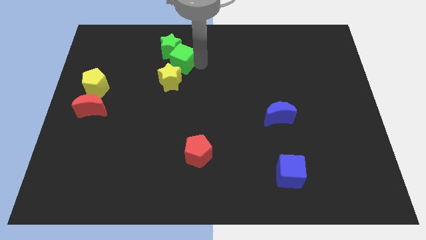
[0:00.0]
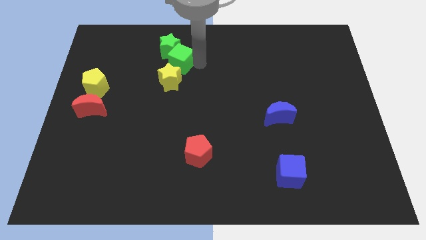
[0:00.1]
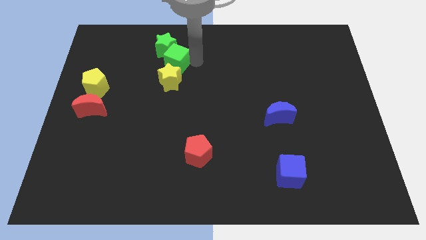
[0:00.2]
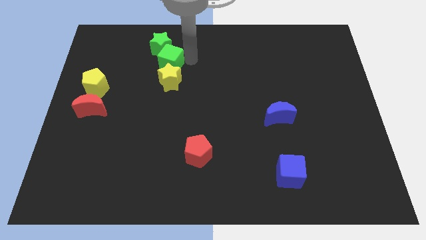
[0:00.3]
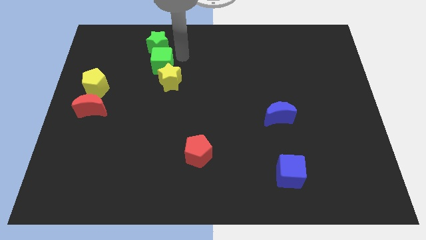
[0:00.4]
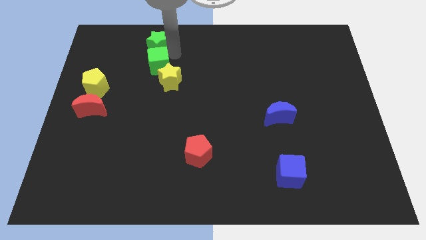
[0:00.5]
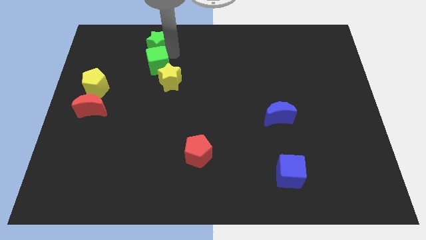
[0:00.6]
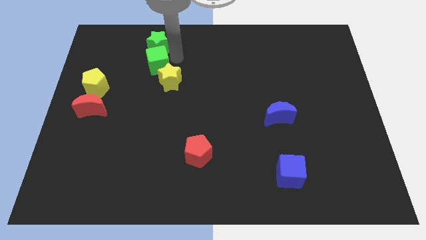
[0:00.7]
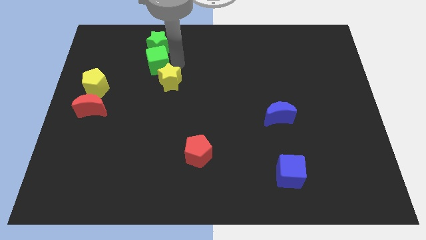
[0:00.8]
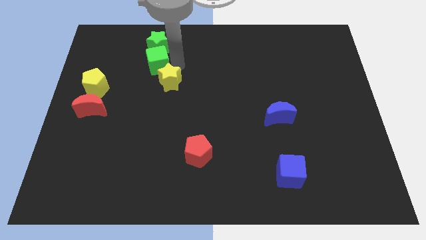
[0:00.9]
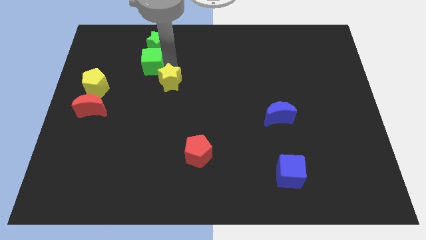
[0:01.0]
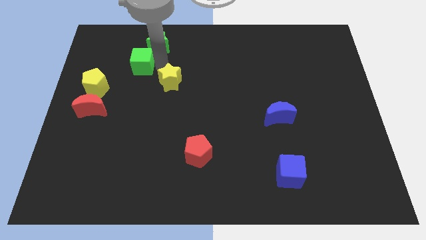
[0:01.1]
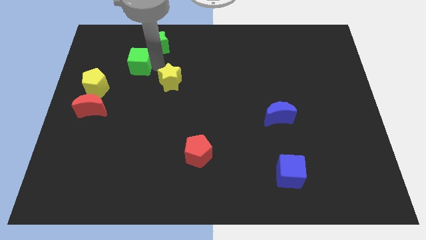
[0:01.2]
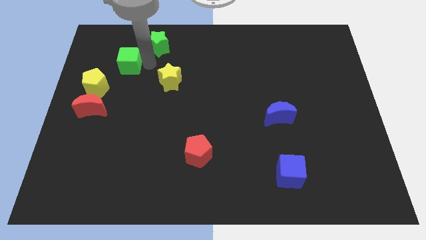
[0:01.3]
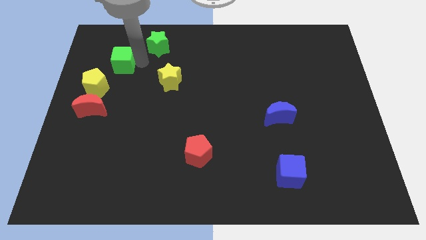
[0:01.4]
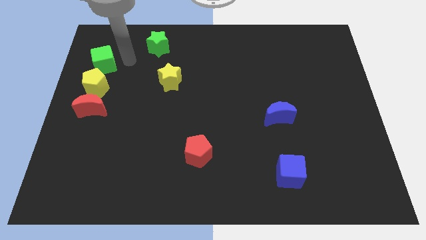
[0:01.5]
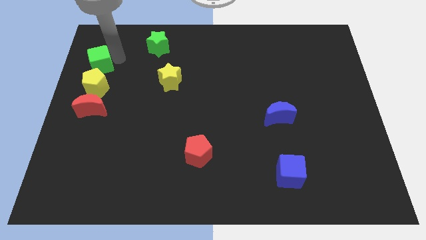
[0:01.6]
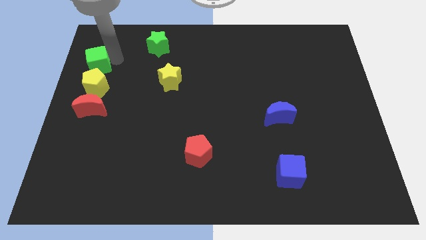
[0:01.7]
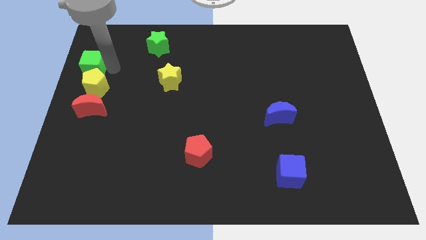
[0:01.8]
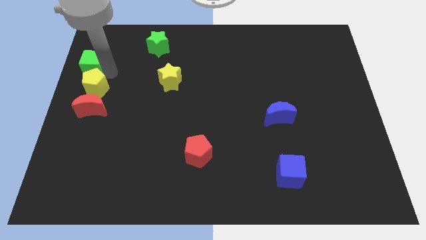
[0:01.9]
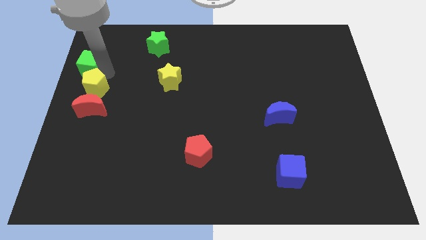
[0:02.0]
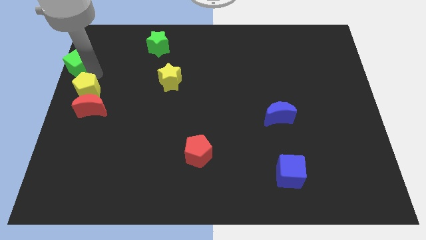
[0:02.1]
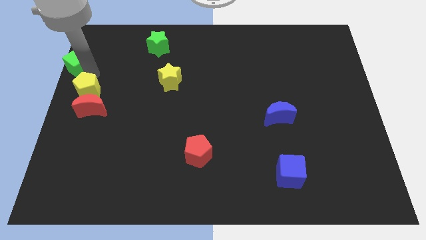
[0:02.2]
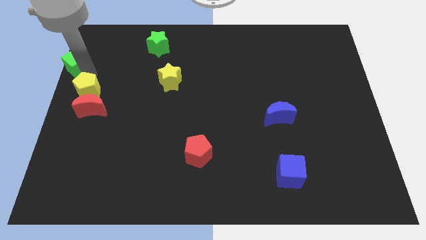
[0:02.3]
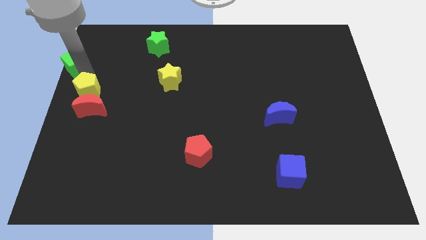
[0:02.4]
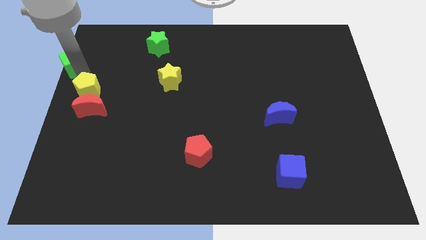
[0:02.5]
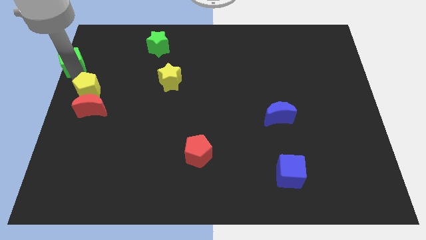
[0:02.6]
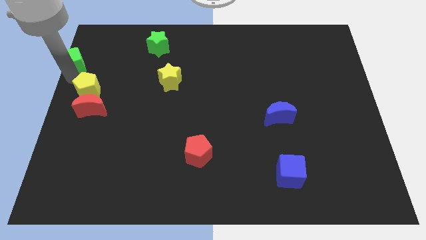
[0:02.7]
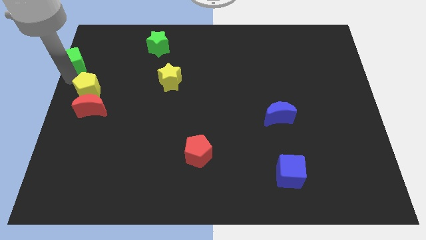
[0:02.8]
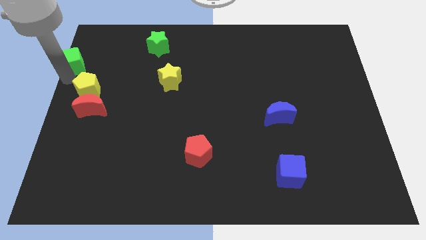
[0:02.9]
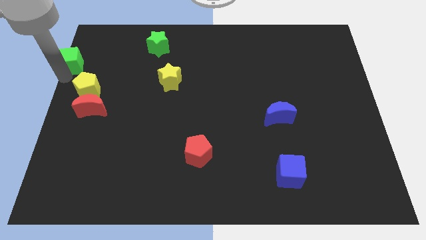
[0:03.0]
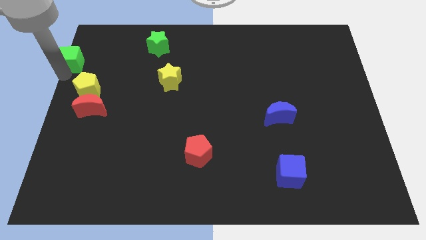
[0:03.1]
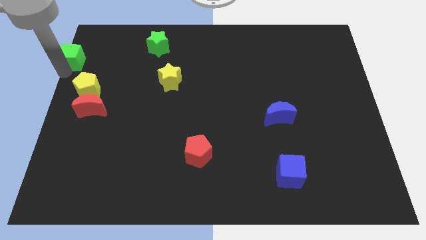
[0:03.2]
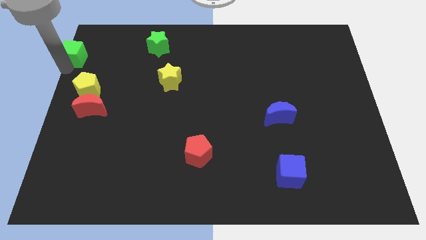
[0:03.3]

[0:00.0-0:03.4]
separate green cube from green star

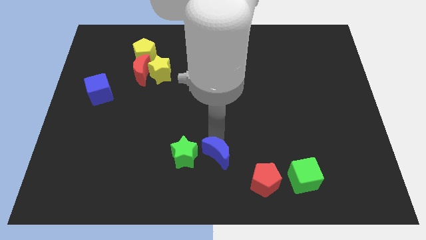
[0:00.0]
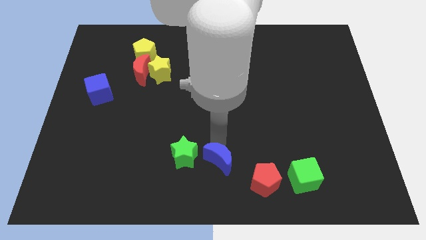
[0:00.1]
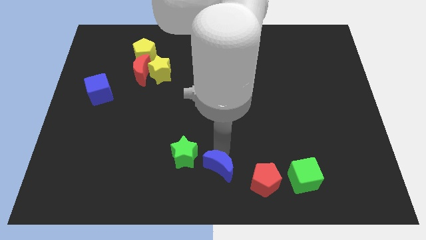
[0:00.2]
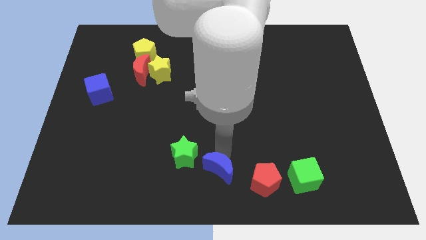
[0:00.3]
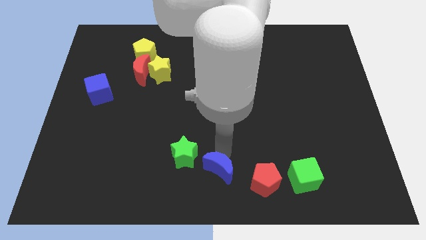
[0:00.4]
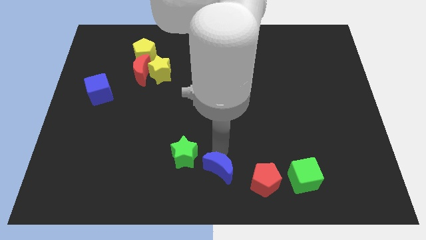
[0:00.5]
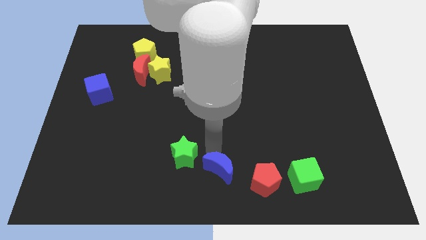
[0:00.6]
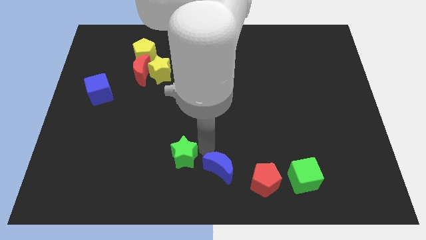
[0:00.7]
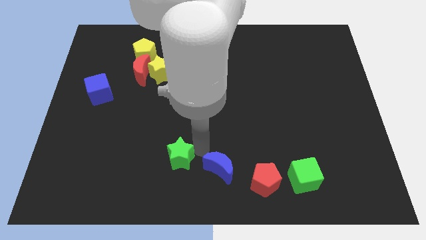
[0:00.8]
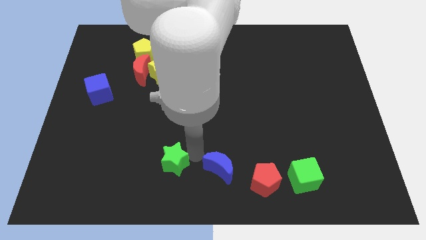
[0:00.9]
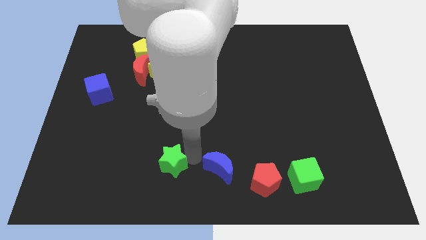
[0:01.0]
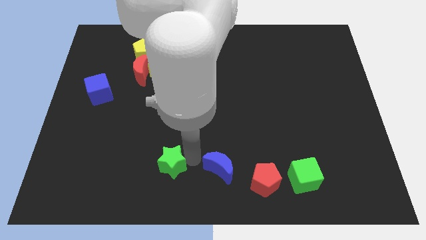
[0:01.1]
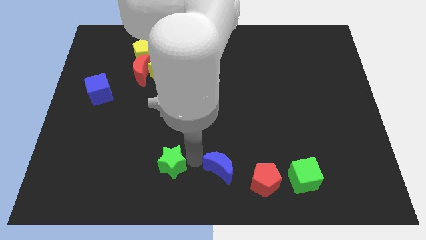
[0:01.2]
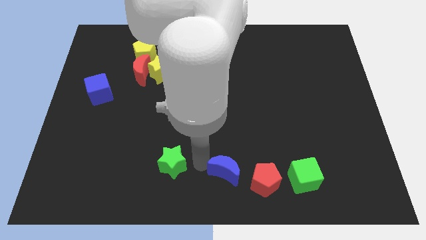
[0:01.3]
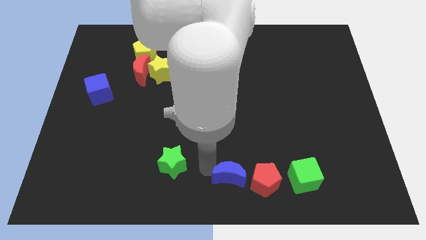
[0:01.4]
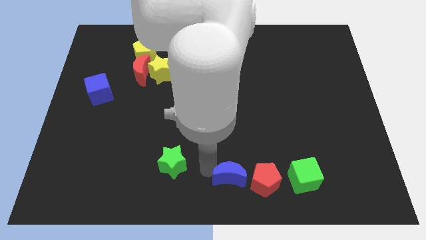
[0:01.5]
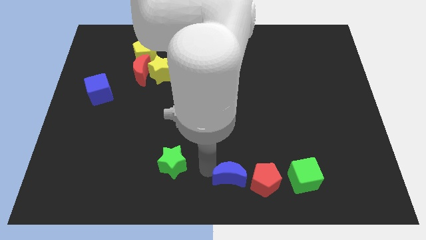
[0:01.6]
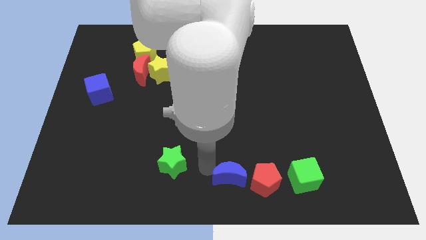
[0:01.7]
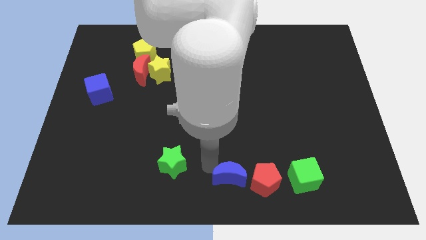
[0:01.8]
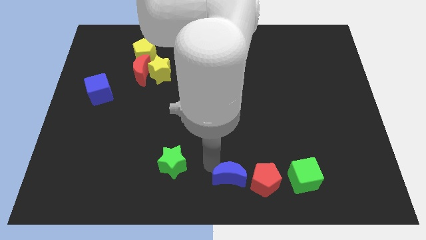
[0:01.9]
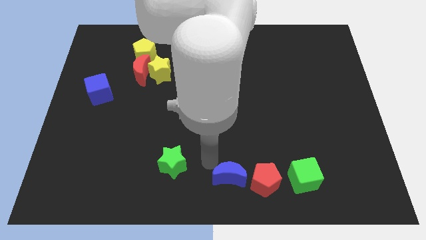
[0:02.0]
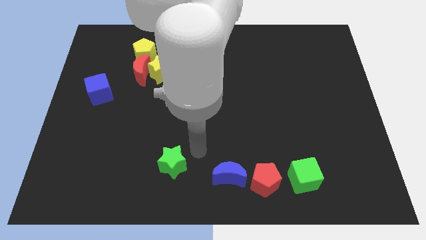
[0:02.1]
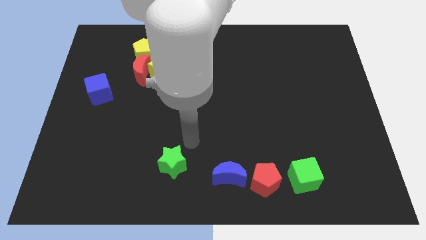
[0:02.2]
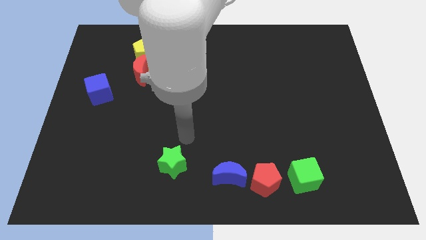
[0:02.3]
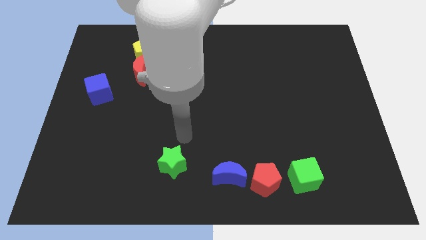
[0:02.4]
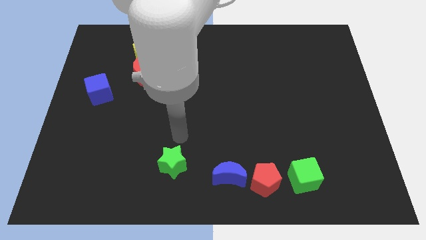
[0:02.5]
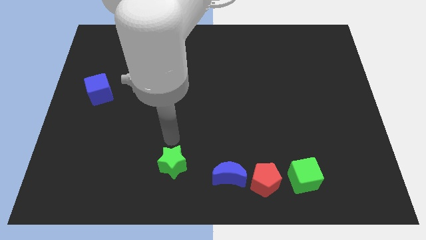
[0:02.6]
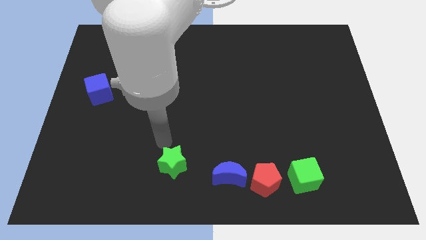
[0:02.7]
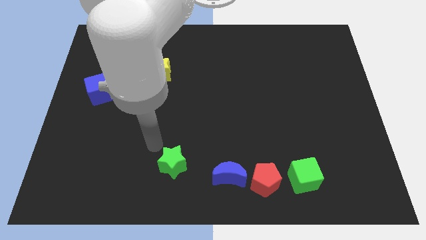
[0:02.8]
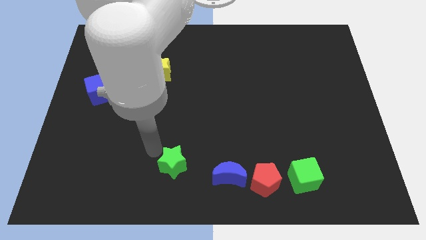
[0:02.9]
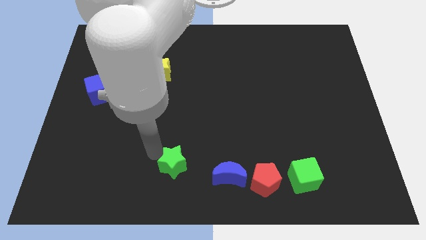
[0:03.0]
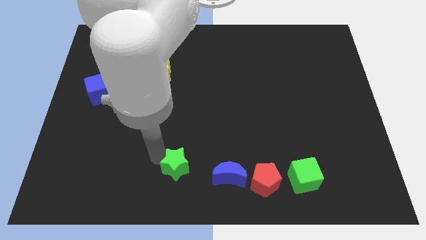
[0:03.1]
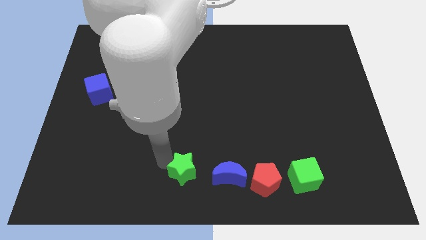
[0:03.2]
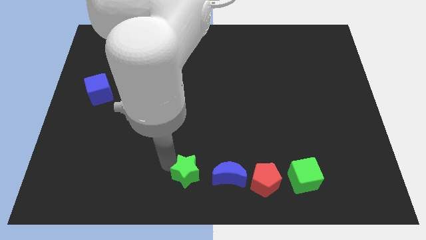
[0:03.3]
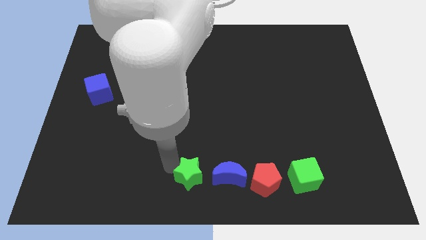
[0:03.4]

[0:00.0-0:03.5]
move the green star to the left of blue crescent

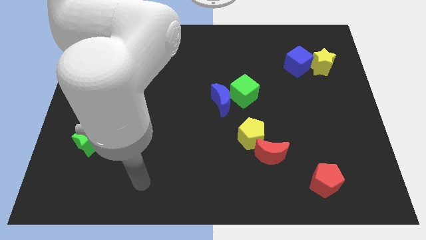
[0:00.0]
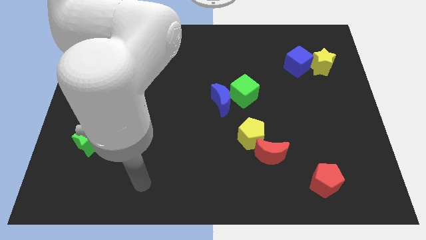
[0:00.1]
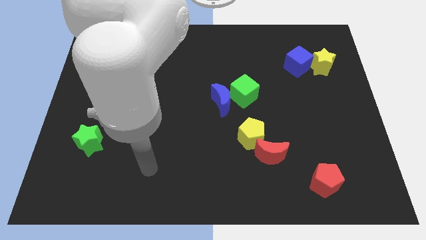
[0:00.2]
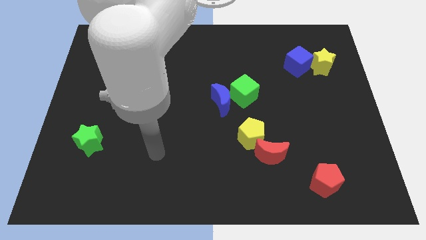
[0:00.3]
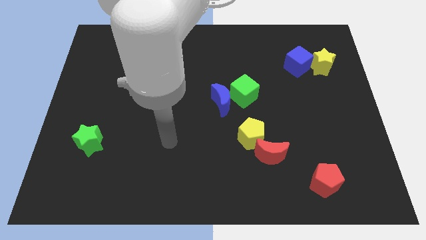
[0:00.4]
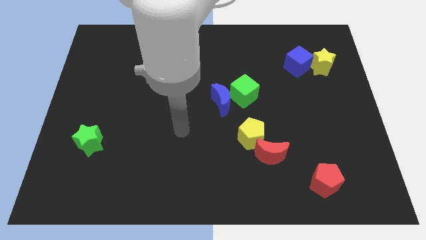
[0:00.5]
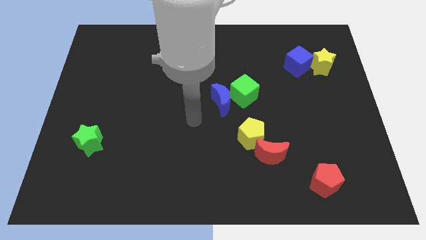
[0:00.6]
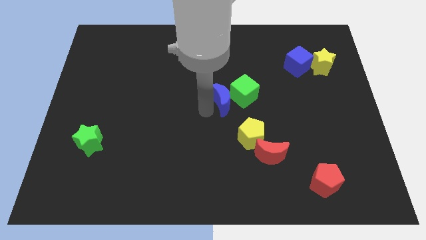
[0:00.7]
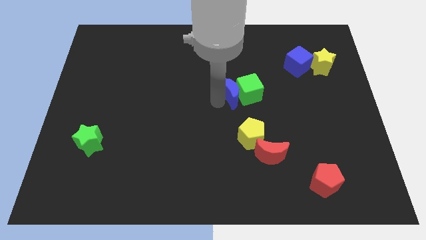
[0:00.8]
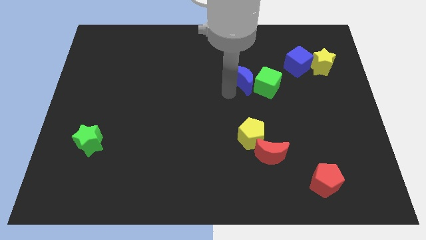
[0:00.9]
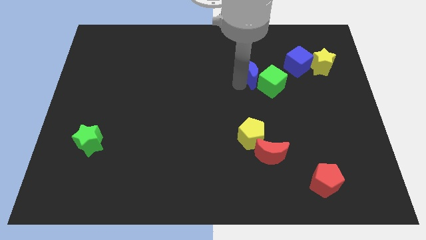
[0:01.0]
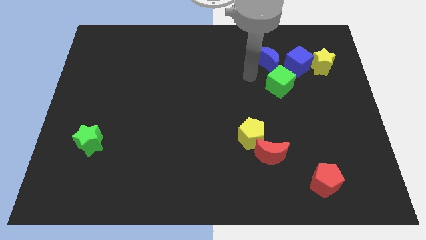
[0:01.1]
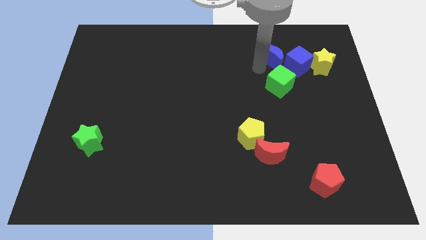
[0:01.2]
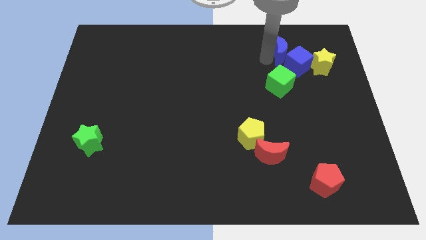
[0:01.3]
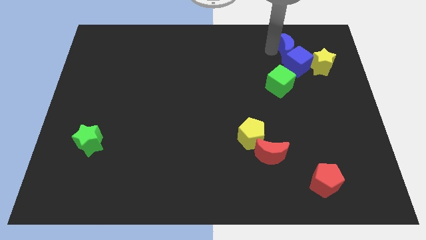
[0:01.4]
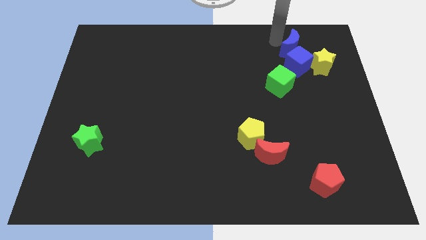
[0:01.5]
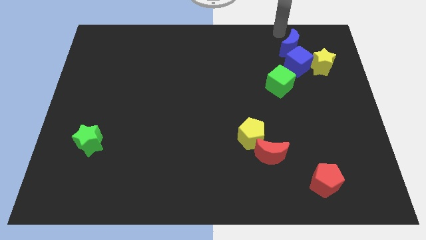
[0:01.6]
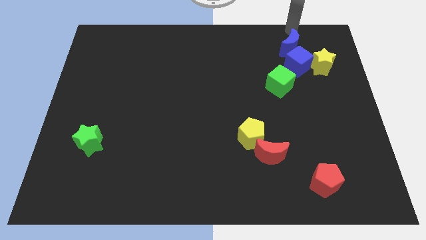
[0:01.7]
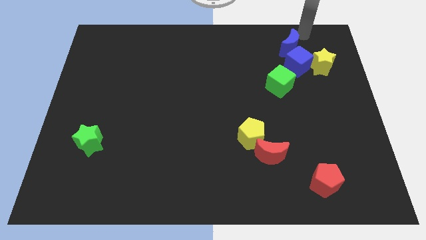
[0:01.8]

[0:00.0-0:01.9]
place the blue moon on top of the blue cube

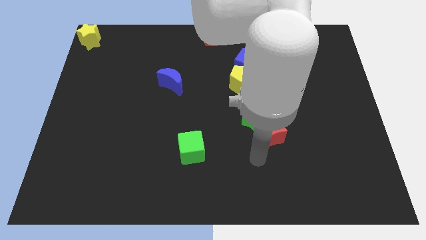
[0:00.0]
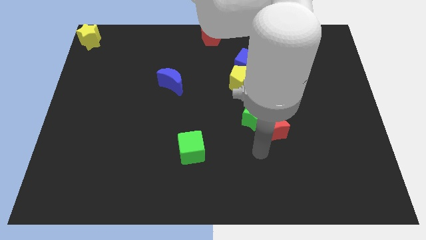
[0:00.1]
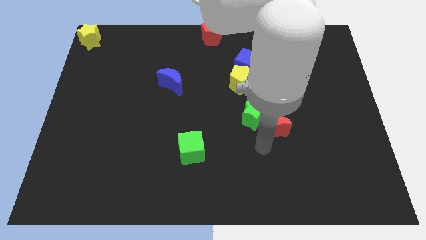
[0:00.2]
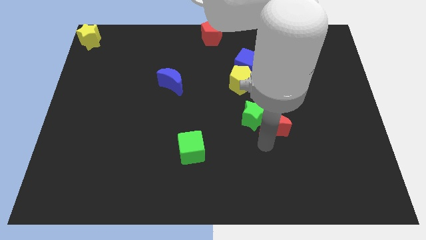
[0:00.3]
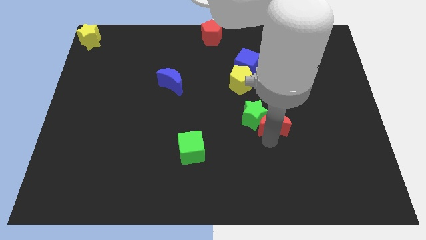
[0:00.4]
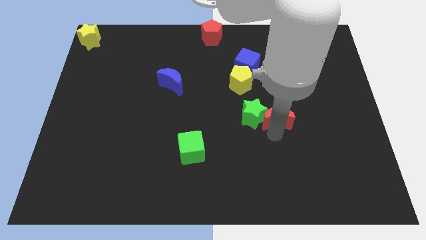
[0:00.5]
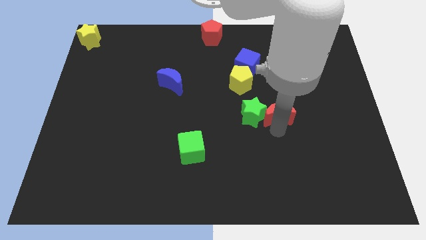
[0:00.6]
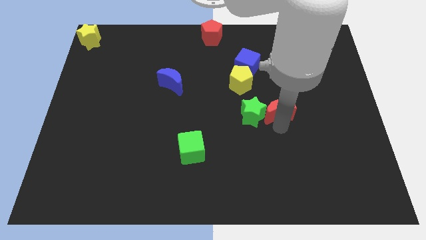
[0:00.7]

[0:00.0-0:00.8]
move the red crescent right beside the green star
